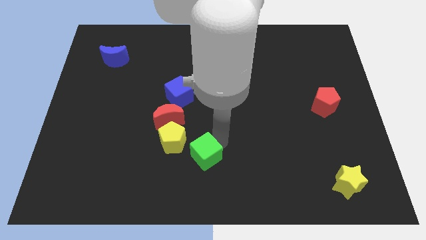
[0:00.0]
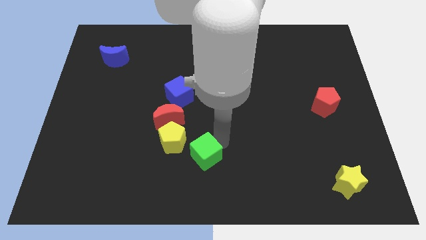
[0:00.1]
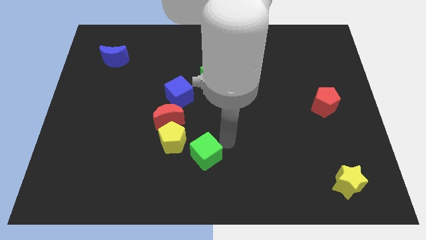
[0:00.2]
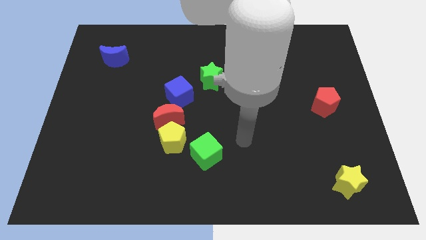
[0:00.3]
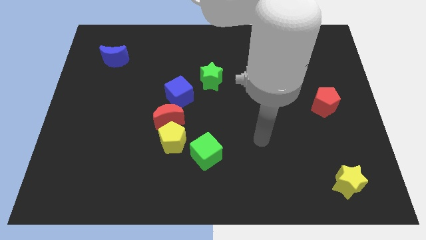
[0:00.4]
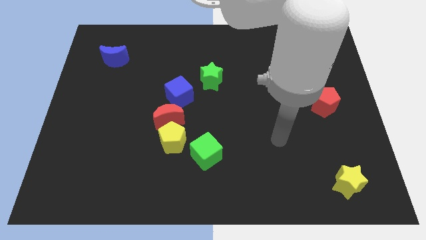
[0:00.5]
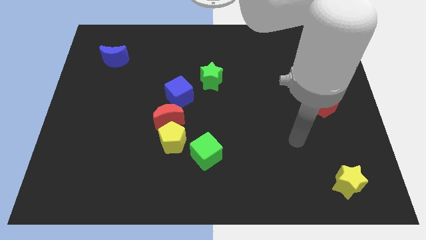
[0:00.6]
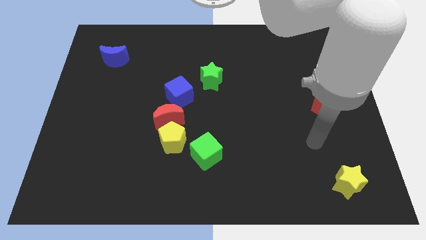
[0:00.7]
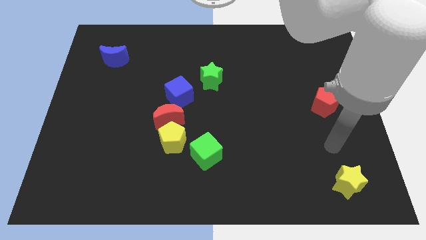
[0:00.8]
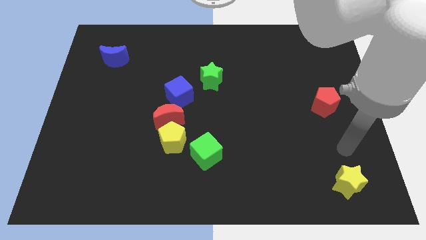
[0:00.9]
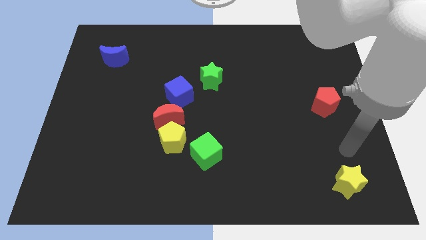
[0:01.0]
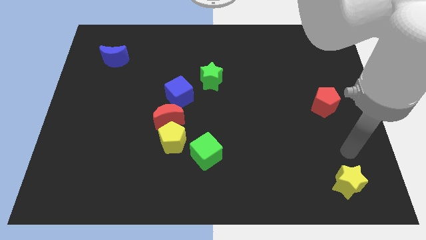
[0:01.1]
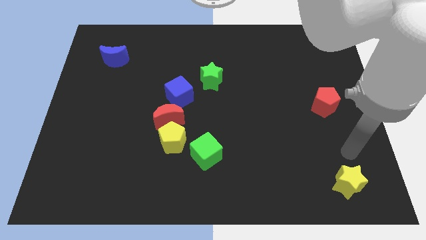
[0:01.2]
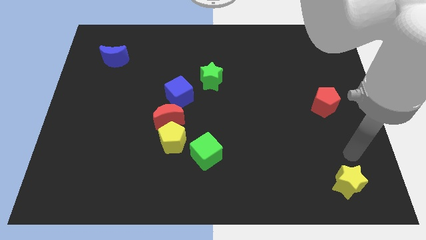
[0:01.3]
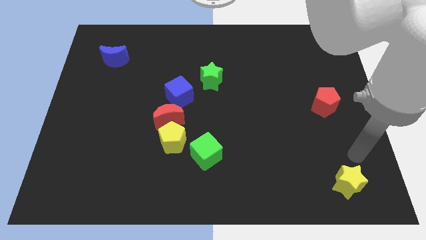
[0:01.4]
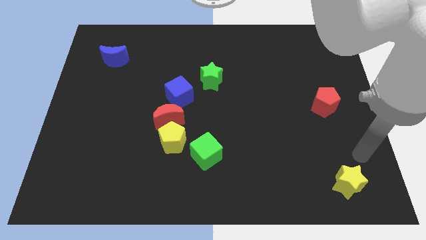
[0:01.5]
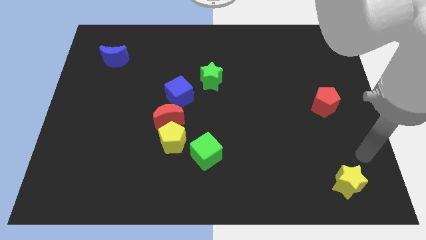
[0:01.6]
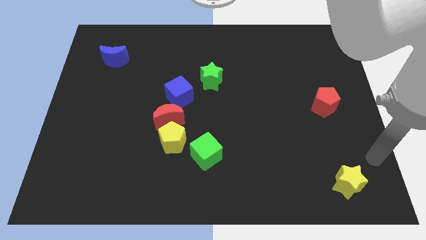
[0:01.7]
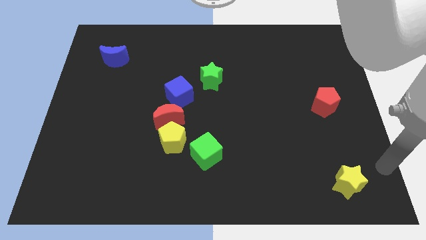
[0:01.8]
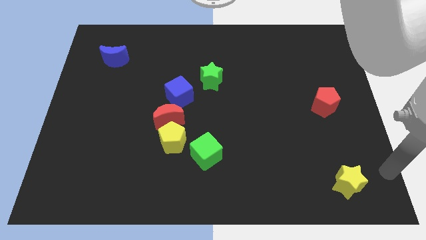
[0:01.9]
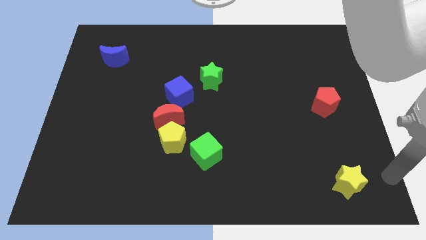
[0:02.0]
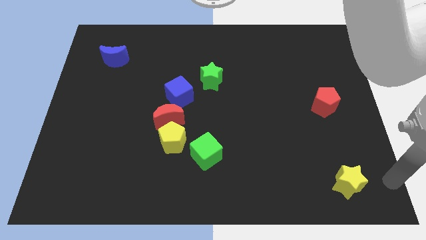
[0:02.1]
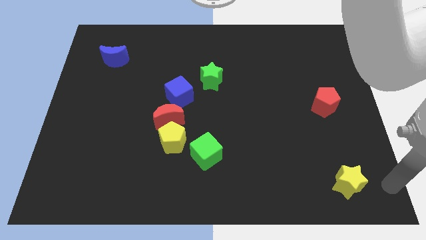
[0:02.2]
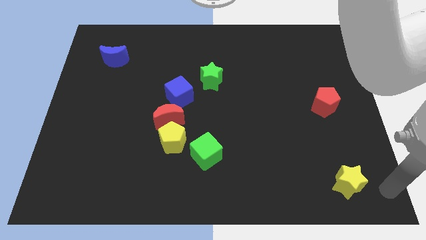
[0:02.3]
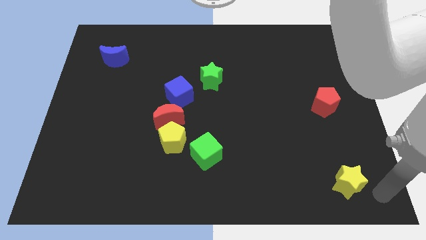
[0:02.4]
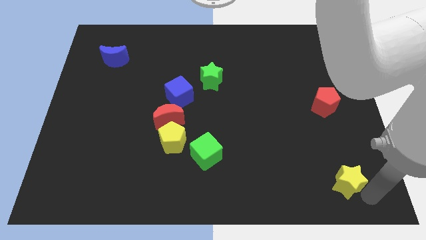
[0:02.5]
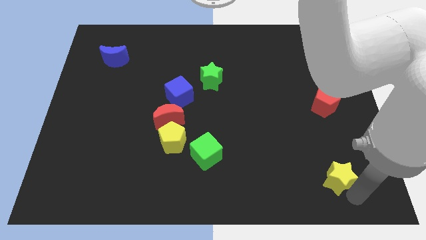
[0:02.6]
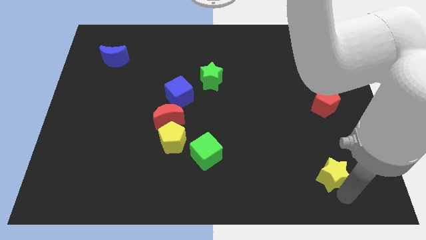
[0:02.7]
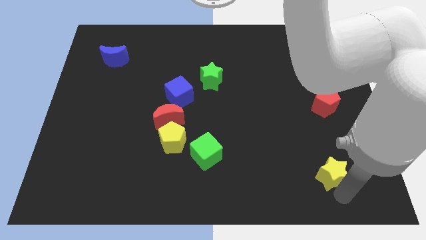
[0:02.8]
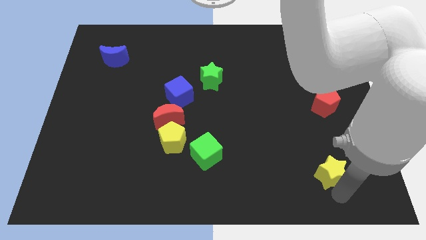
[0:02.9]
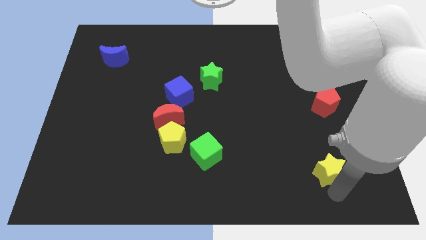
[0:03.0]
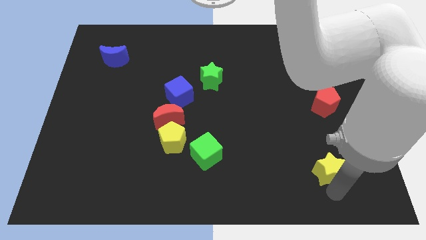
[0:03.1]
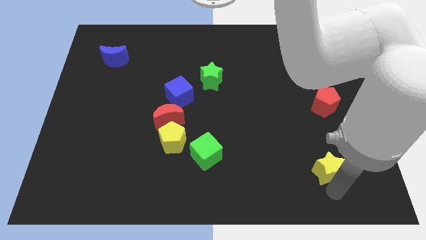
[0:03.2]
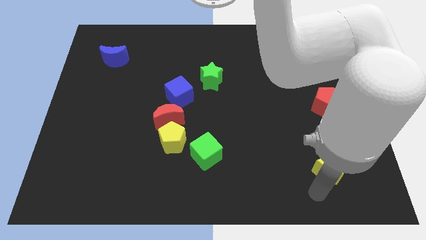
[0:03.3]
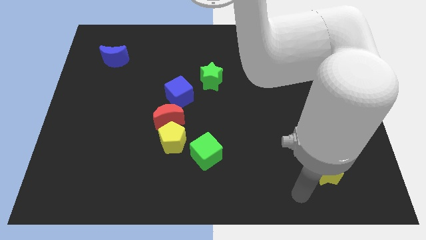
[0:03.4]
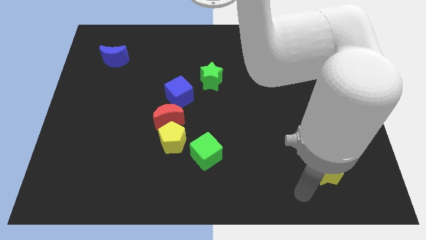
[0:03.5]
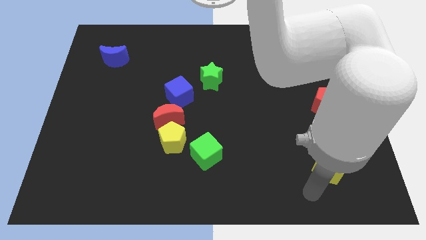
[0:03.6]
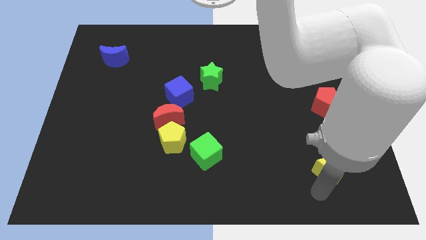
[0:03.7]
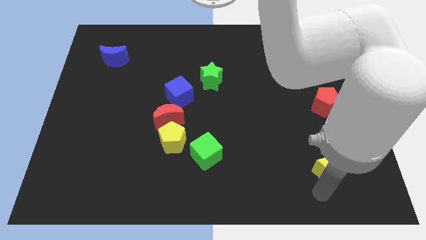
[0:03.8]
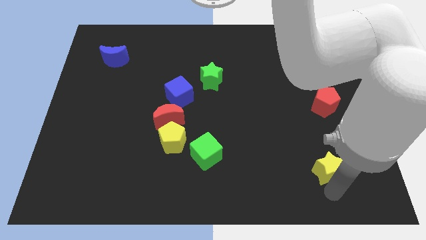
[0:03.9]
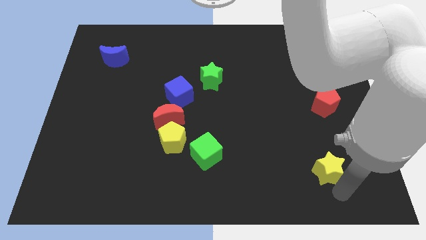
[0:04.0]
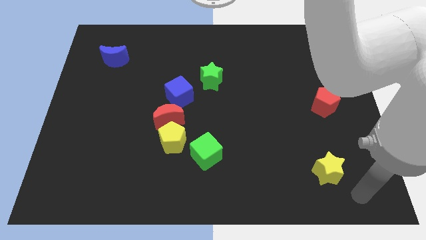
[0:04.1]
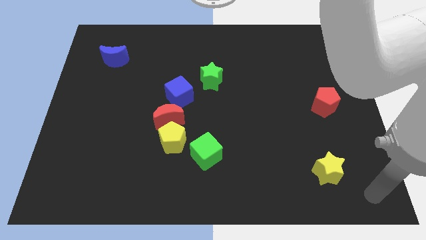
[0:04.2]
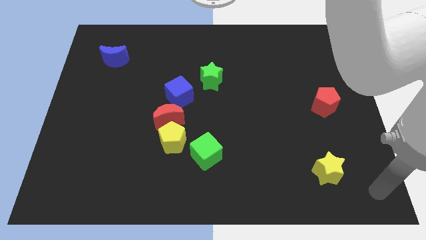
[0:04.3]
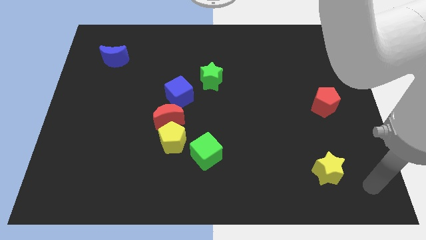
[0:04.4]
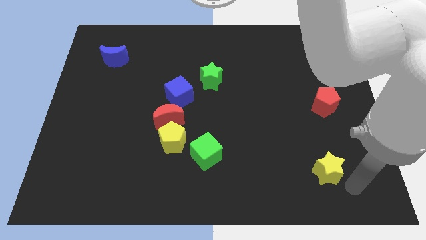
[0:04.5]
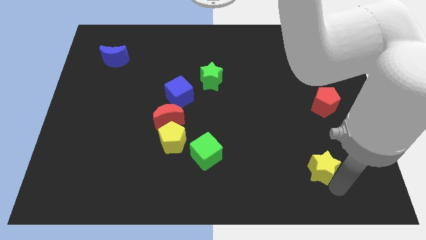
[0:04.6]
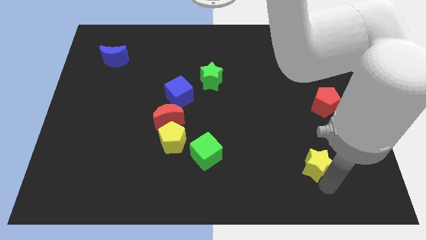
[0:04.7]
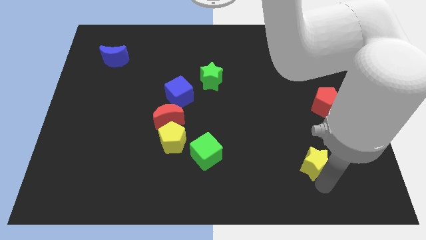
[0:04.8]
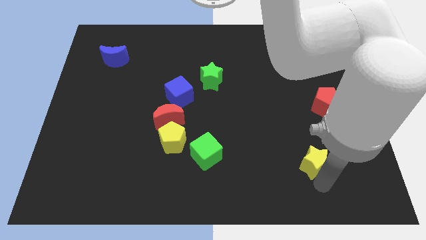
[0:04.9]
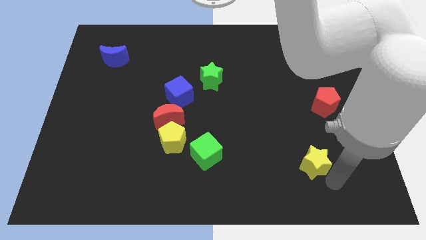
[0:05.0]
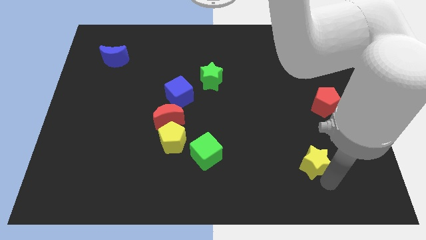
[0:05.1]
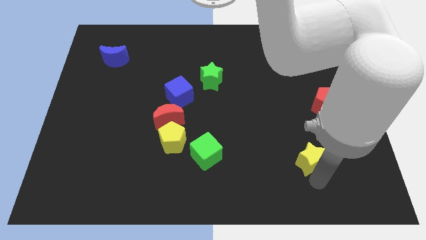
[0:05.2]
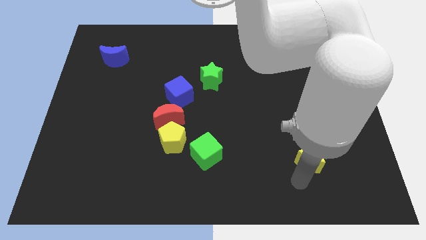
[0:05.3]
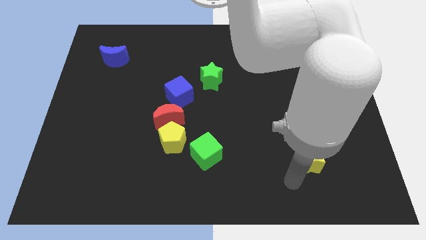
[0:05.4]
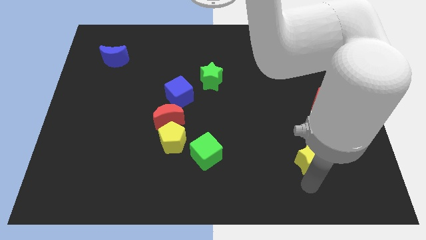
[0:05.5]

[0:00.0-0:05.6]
move the yellow star slightly upwards

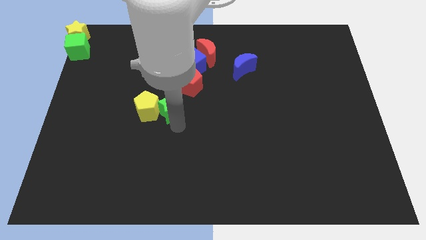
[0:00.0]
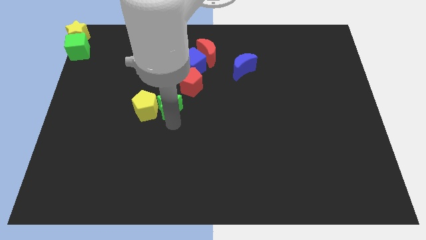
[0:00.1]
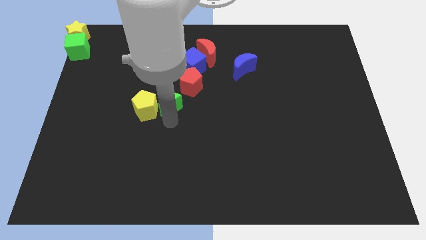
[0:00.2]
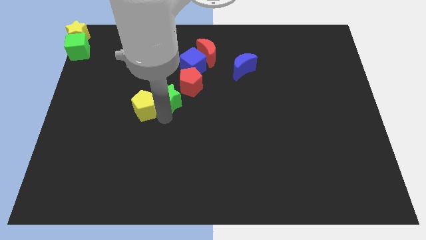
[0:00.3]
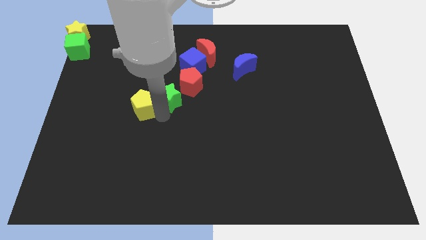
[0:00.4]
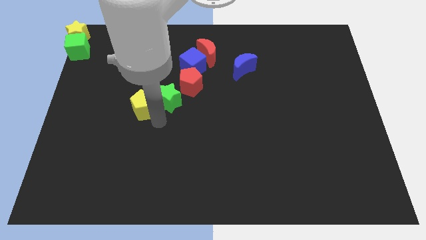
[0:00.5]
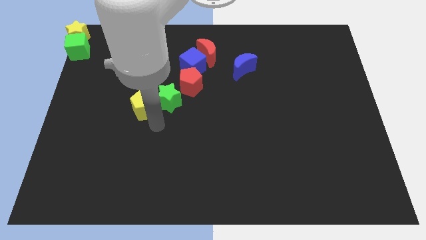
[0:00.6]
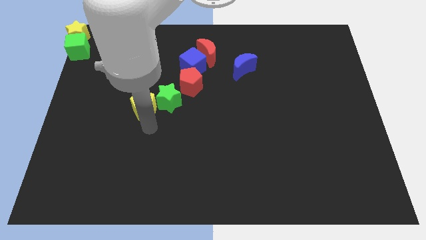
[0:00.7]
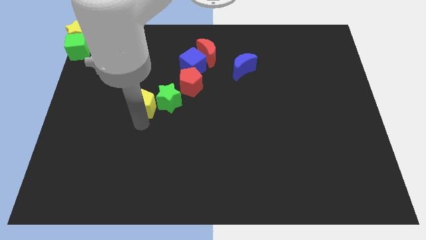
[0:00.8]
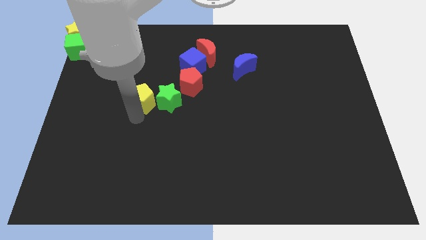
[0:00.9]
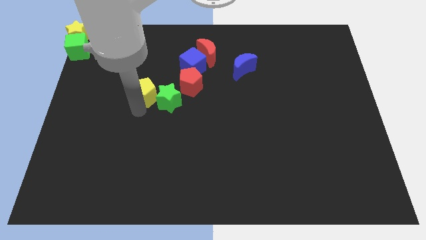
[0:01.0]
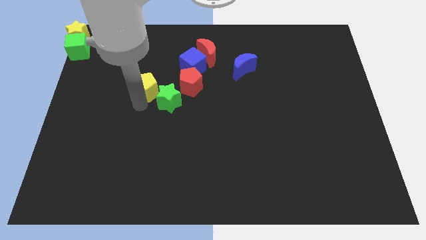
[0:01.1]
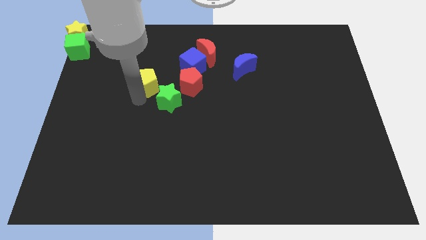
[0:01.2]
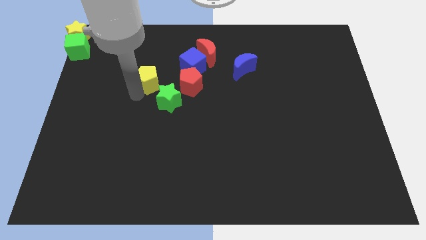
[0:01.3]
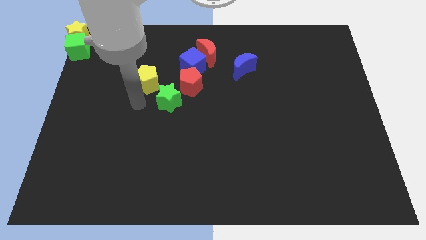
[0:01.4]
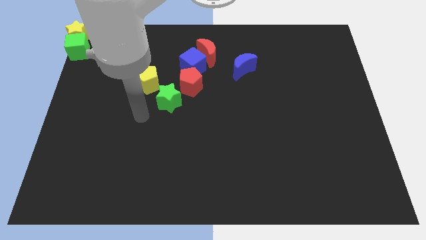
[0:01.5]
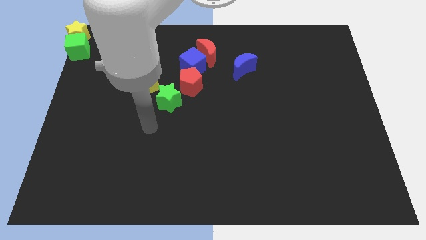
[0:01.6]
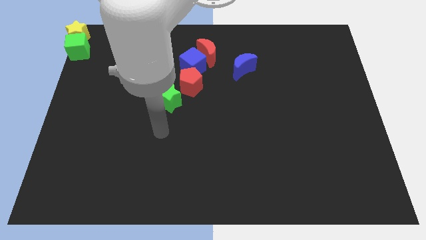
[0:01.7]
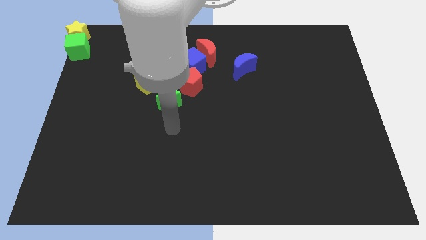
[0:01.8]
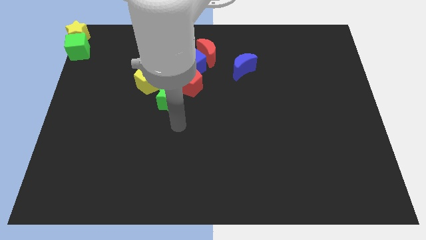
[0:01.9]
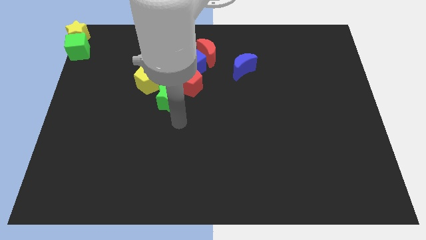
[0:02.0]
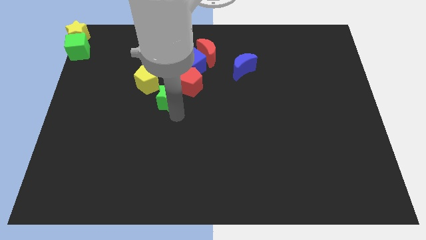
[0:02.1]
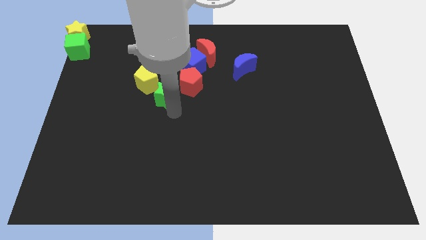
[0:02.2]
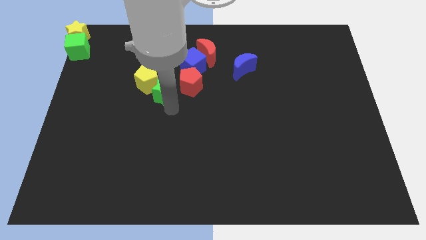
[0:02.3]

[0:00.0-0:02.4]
push yellow pentagon slightly upwards

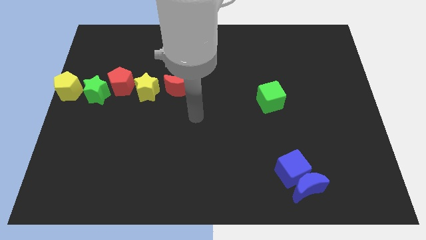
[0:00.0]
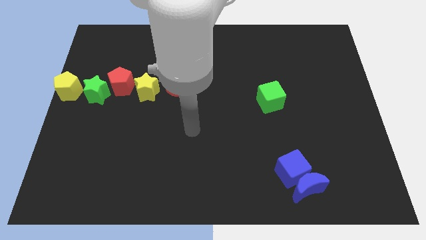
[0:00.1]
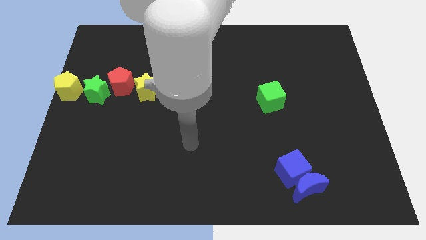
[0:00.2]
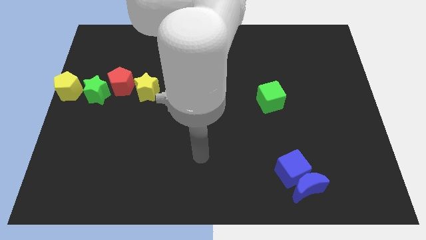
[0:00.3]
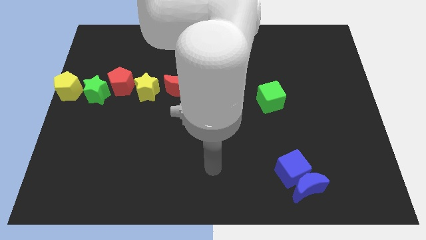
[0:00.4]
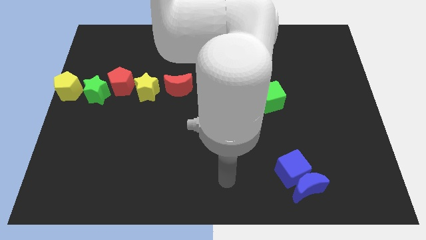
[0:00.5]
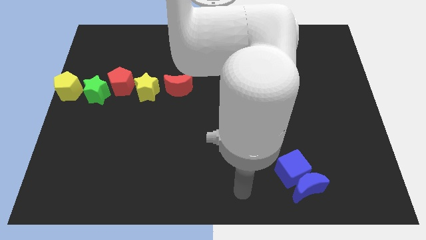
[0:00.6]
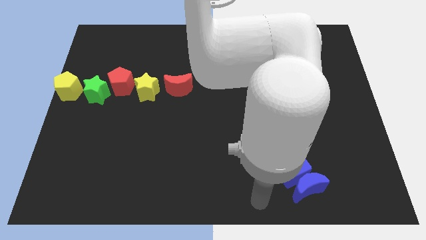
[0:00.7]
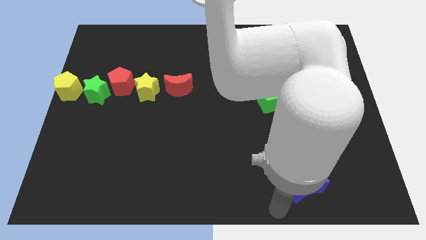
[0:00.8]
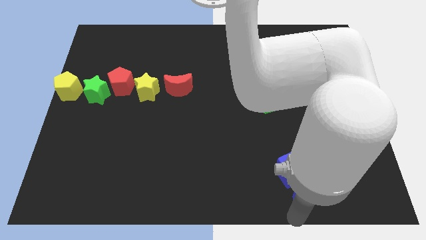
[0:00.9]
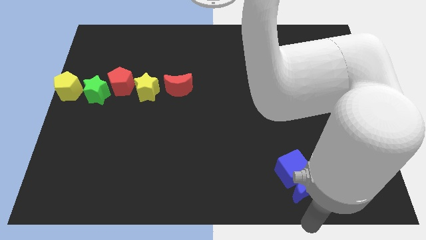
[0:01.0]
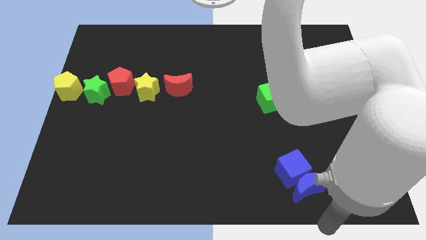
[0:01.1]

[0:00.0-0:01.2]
move your arm below the blue crescent

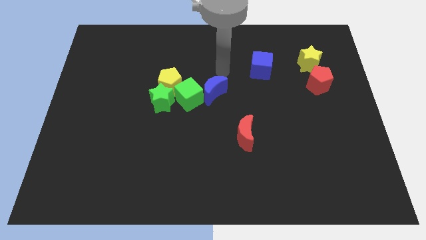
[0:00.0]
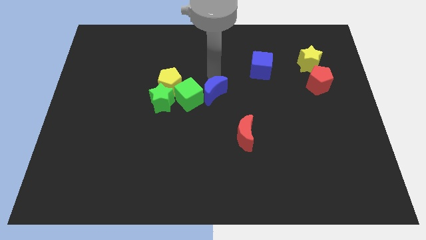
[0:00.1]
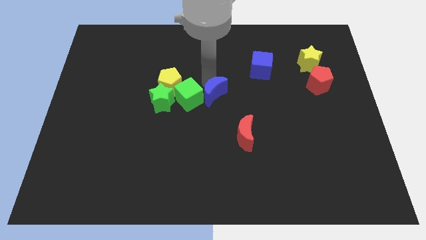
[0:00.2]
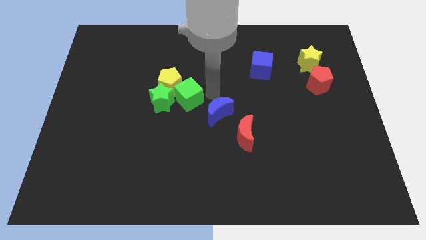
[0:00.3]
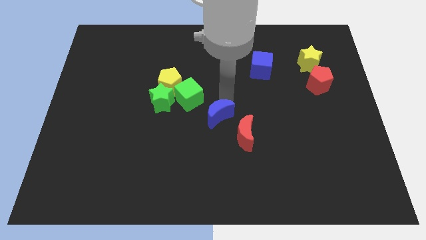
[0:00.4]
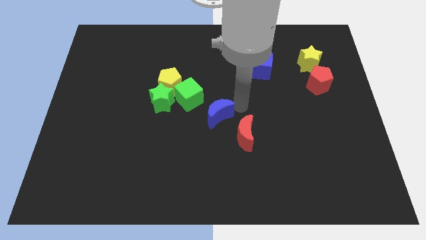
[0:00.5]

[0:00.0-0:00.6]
separate green cube and blue moon
